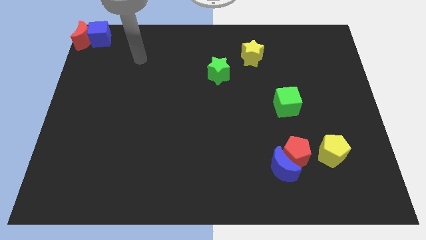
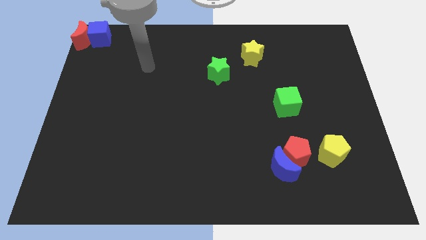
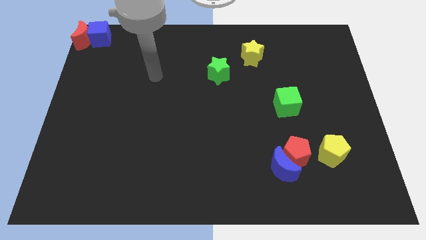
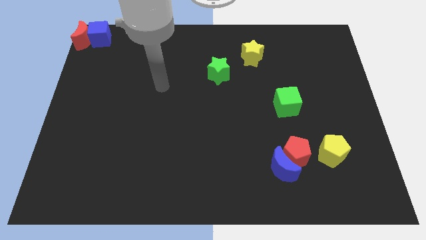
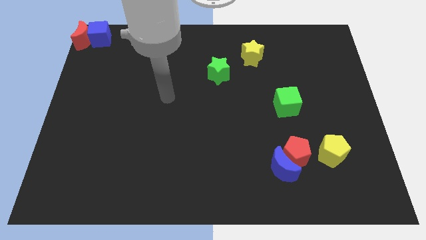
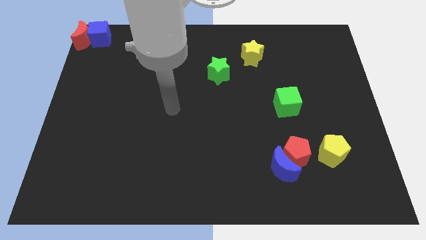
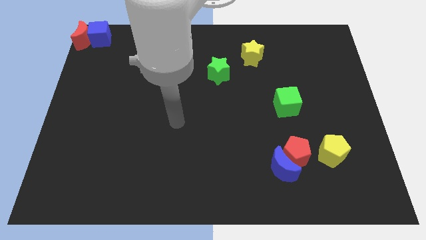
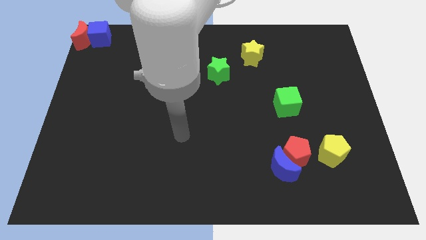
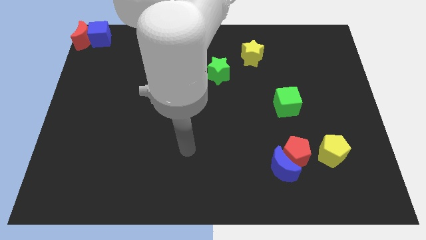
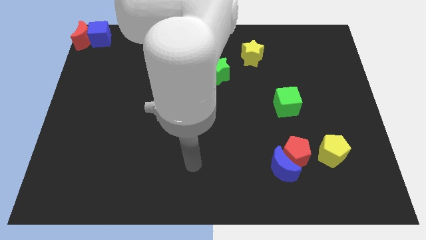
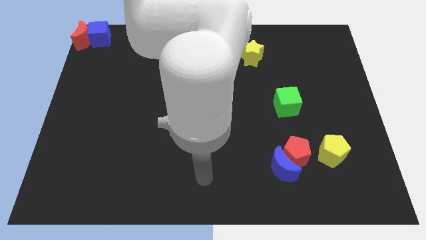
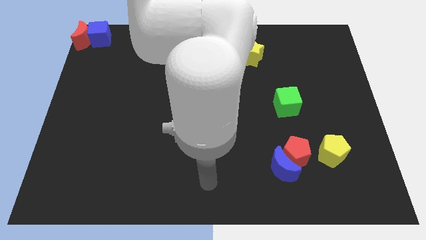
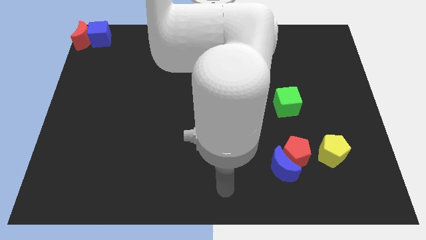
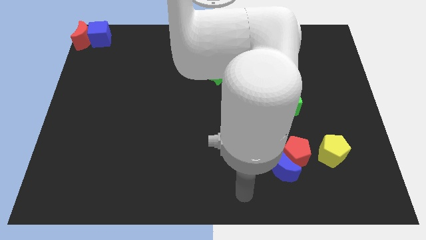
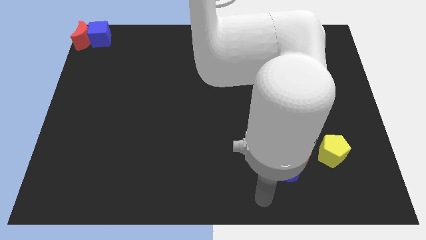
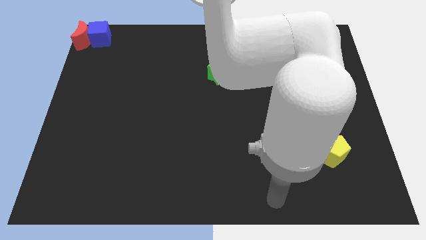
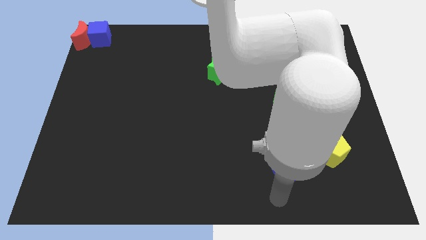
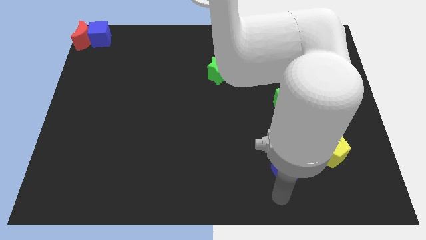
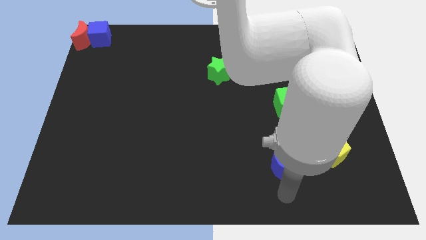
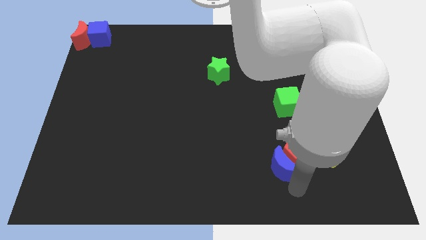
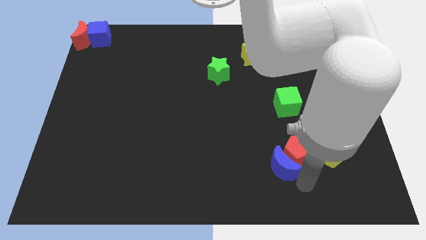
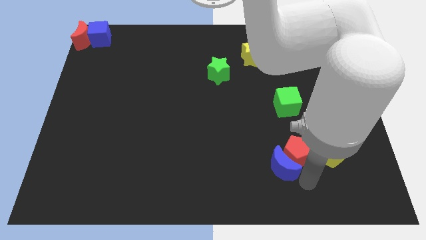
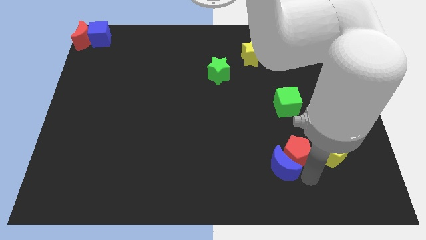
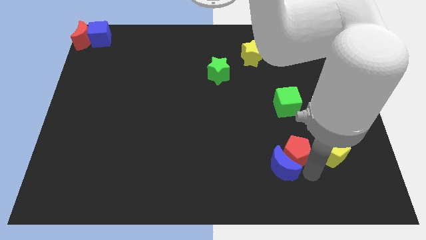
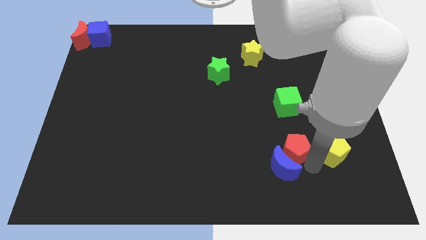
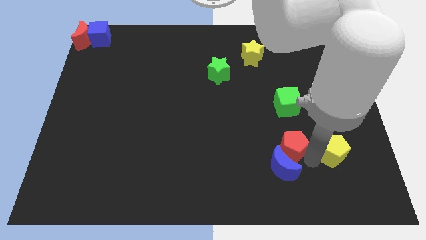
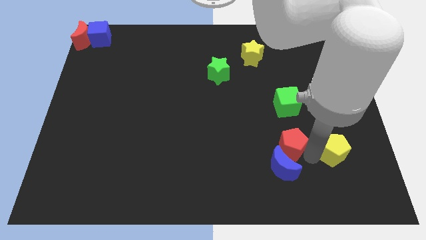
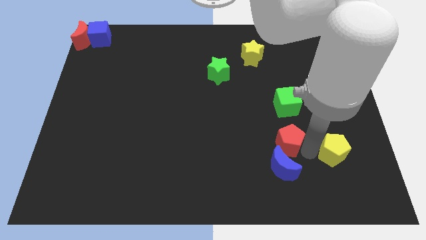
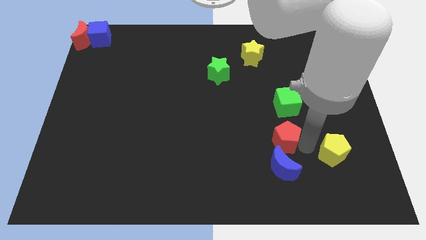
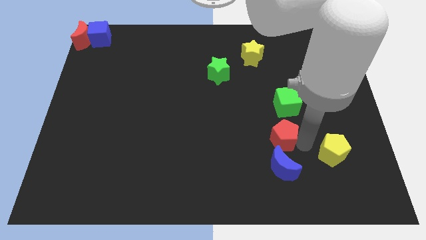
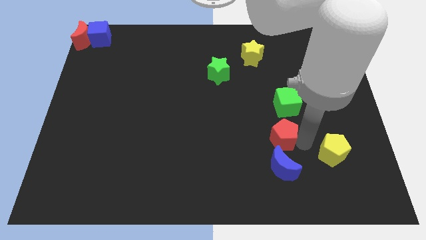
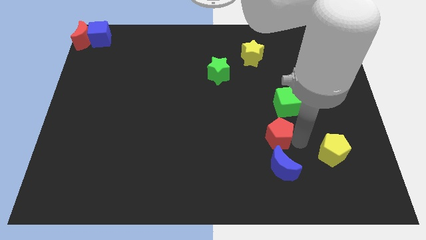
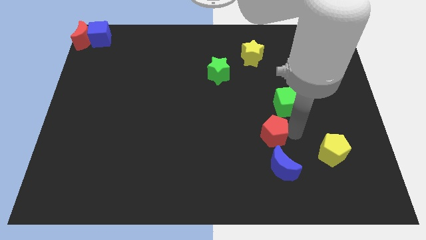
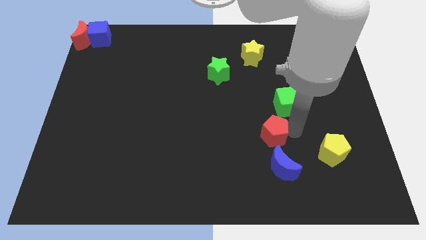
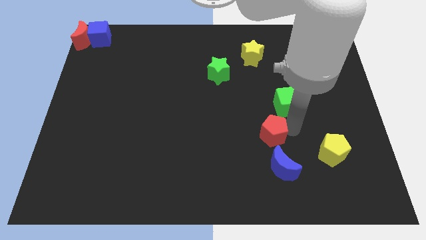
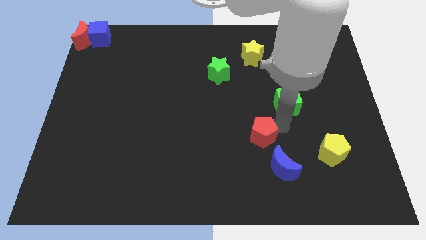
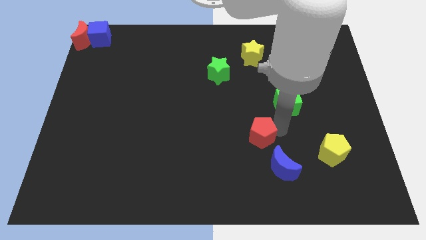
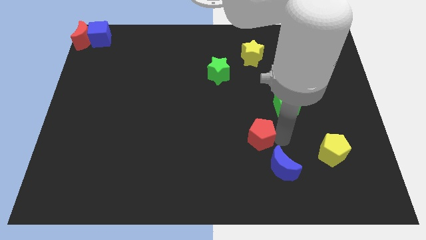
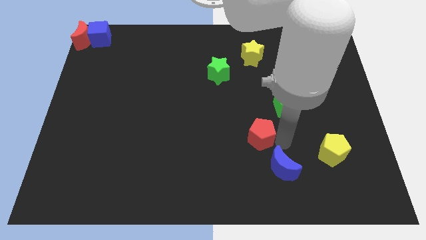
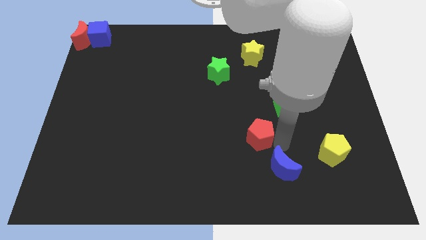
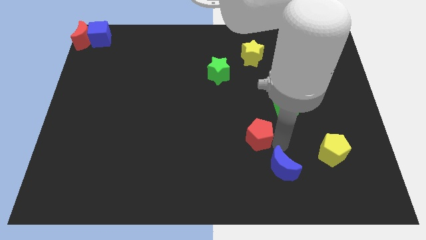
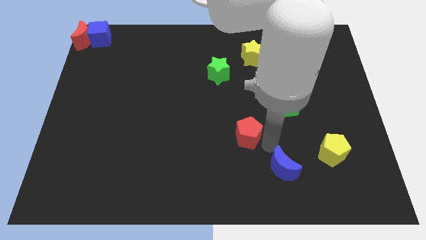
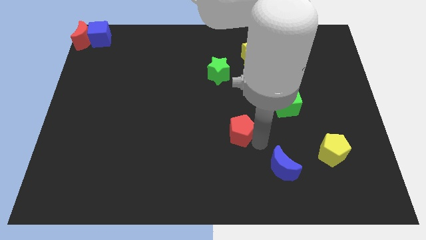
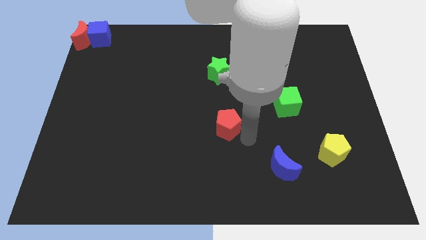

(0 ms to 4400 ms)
move the red pentagon to the top of the board

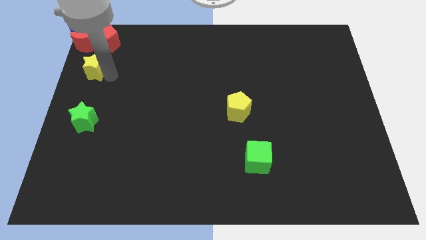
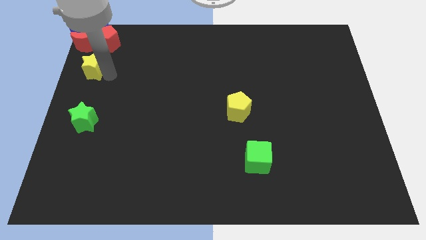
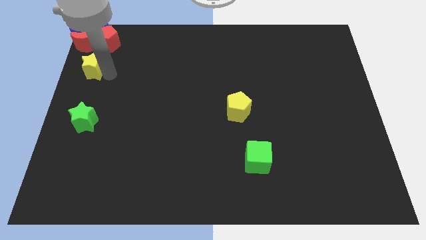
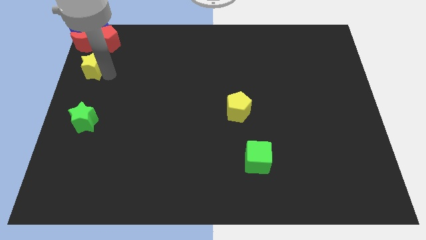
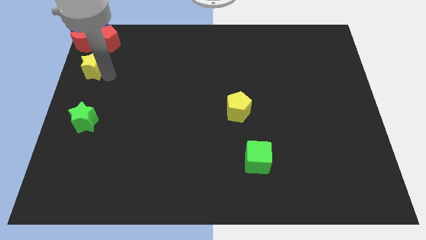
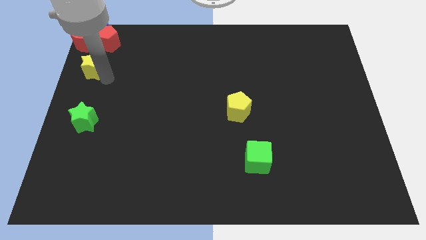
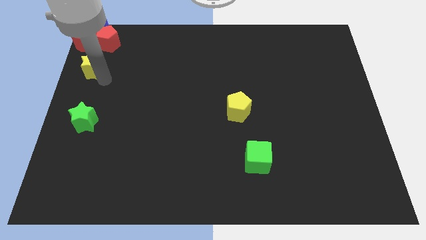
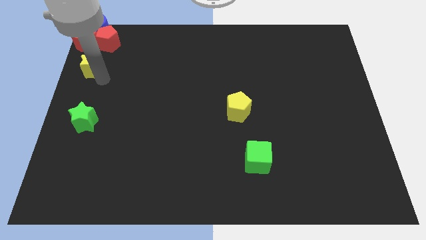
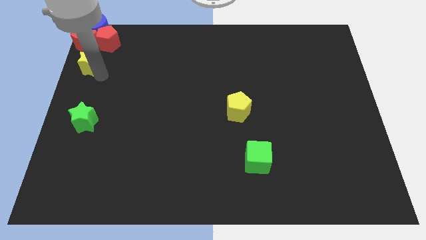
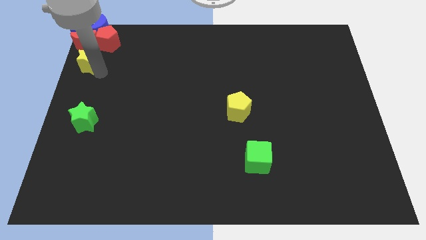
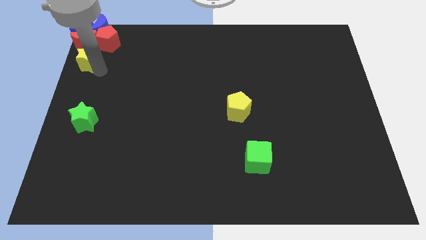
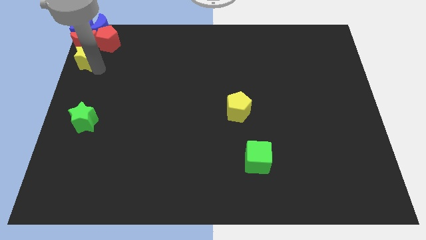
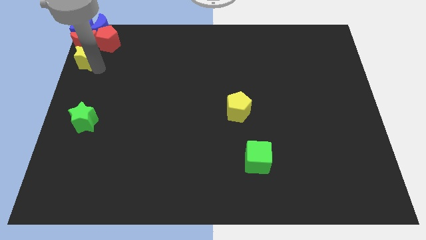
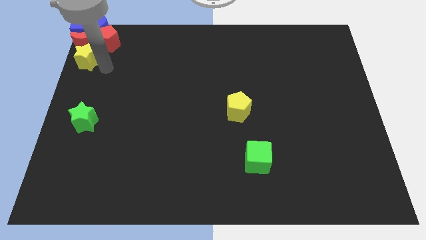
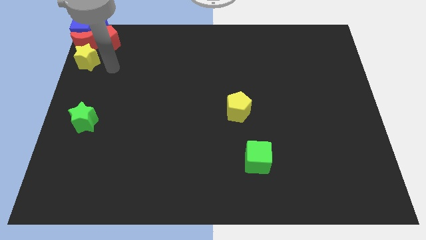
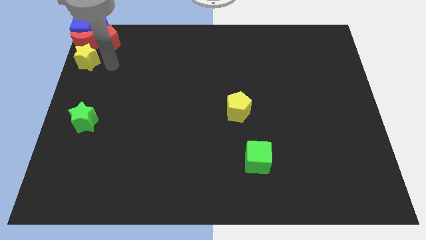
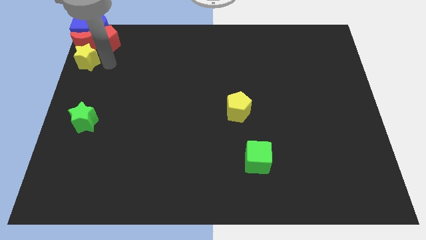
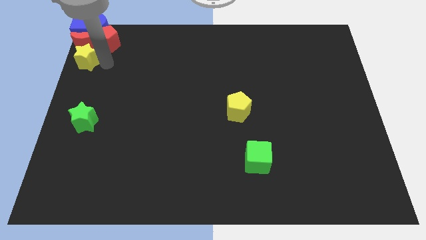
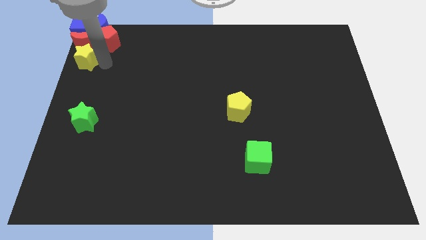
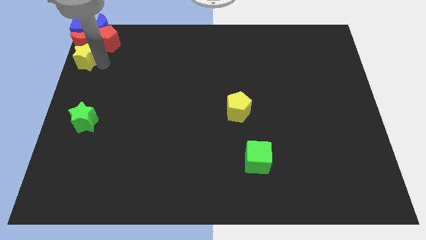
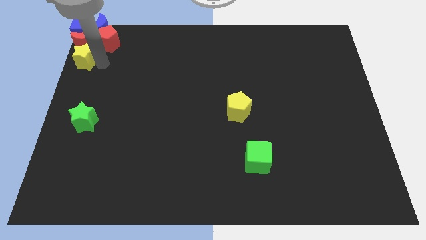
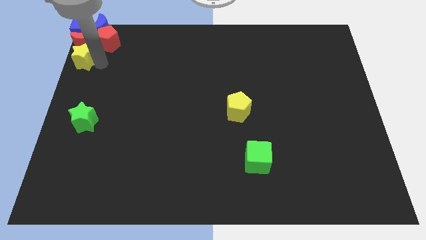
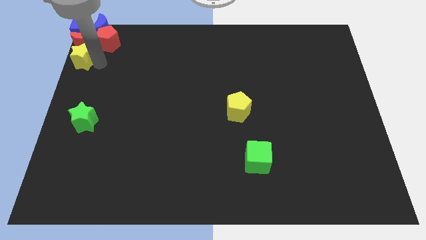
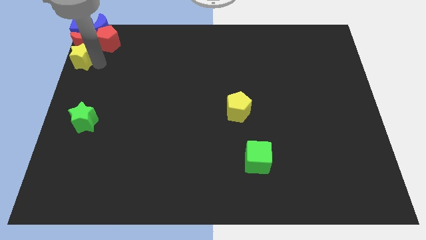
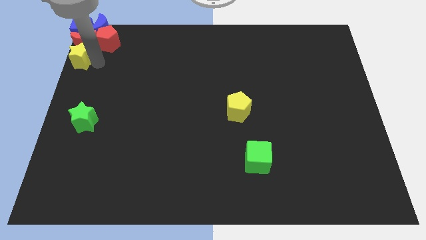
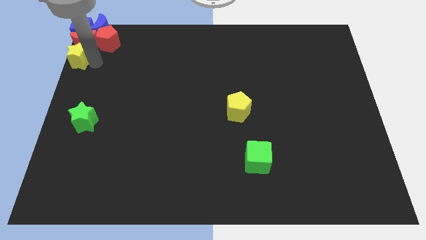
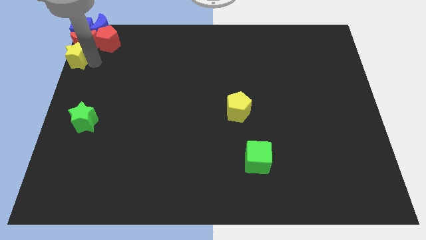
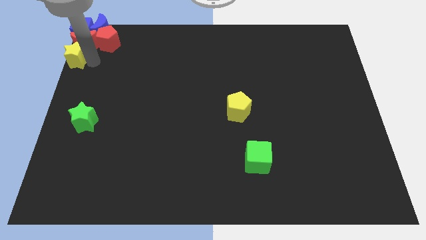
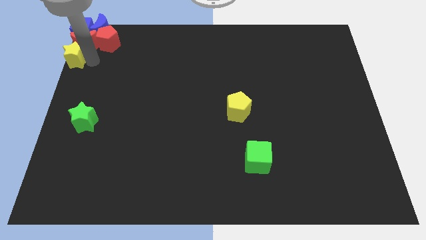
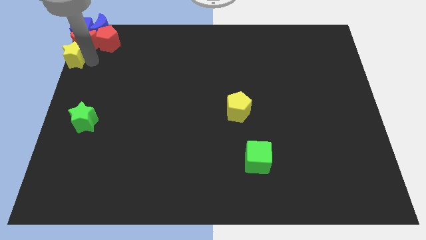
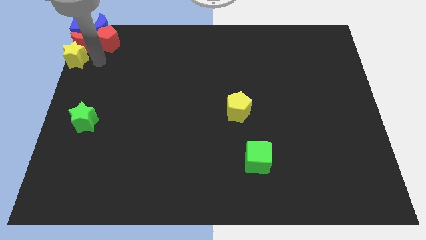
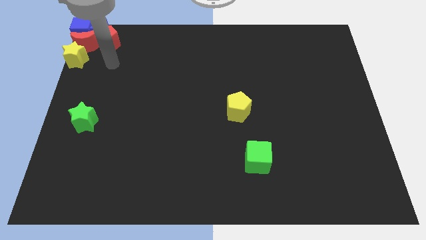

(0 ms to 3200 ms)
move the yellow star close to the group of blocks

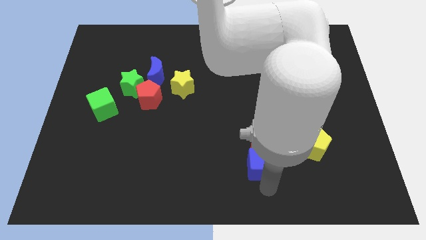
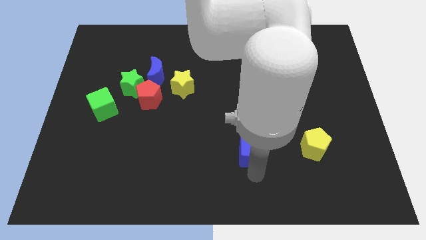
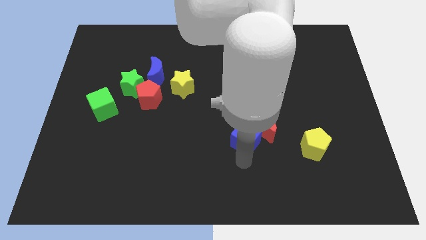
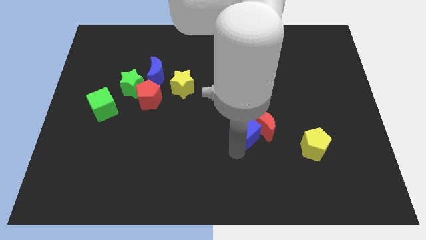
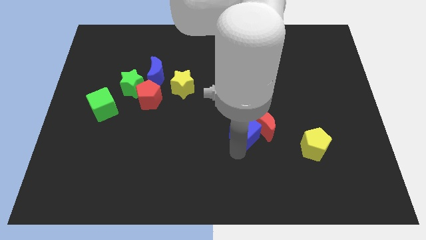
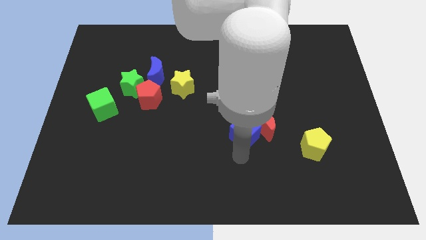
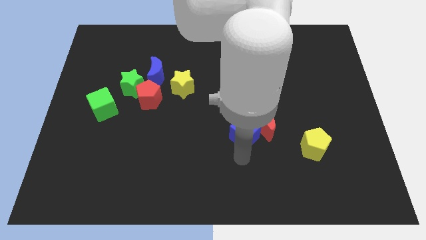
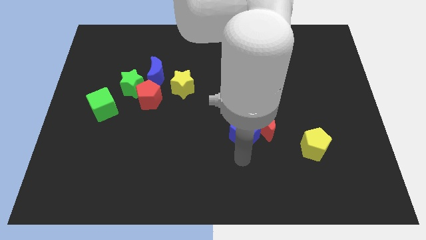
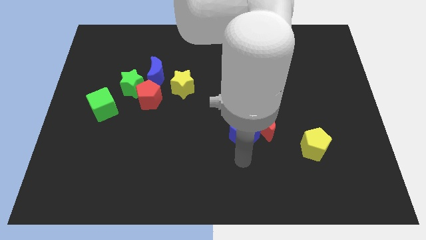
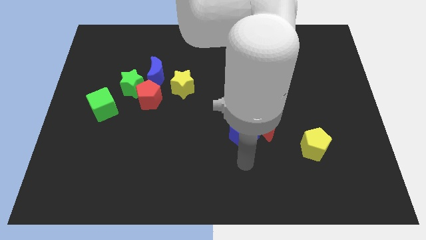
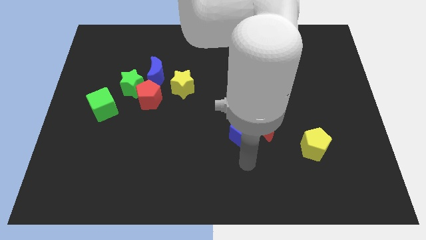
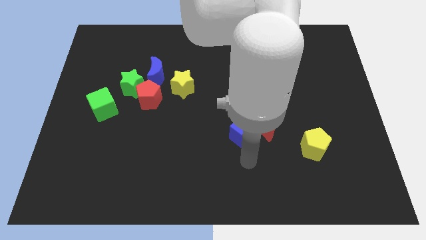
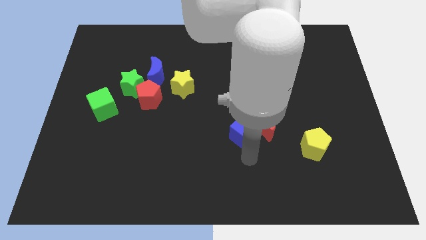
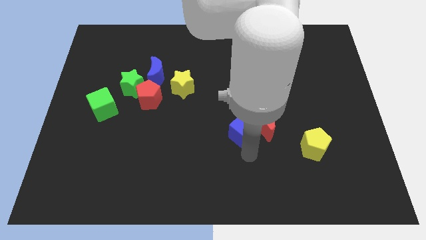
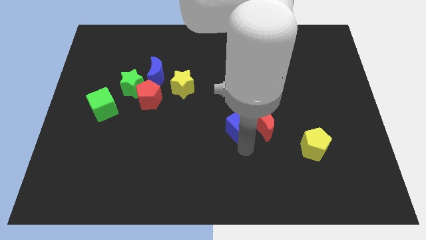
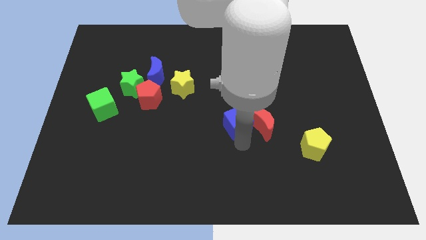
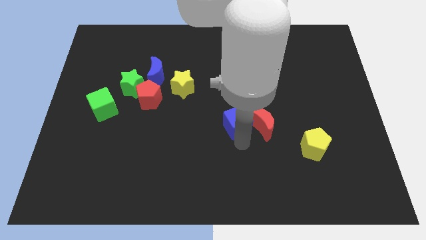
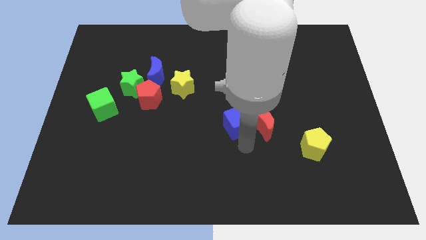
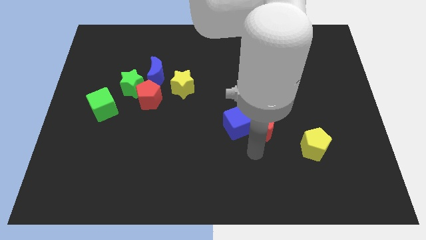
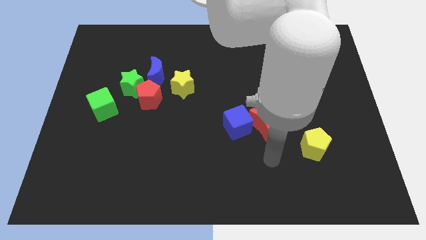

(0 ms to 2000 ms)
push the blue cube towards the center of board
